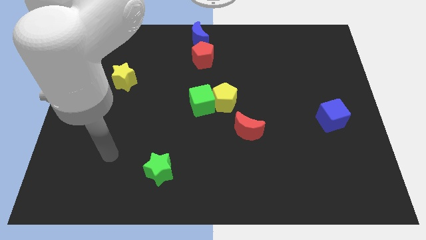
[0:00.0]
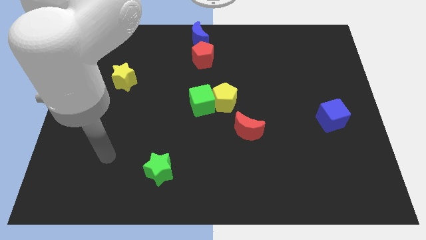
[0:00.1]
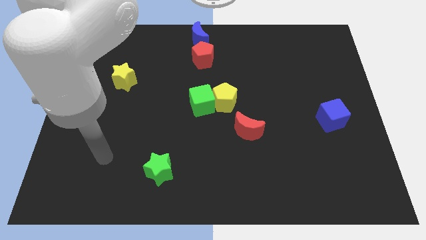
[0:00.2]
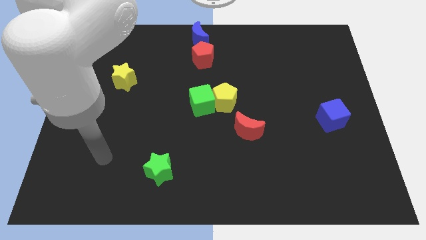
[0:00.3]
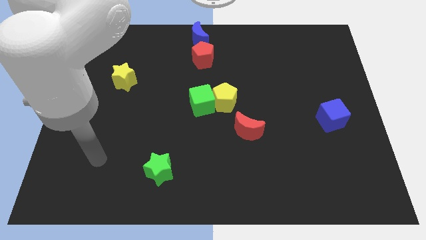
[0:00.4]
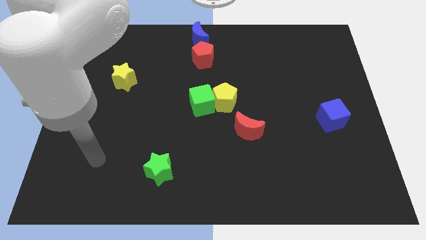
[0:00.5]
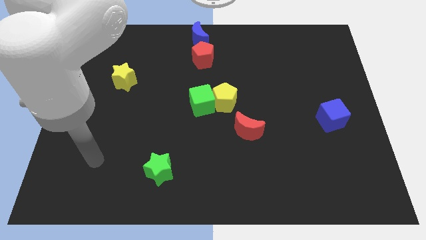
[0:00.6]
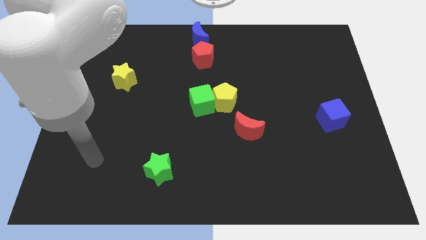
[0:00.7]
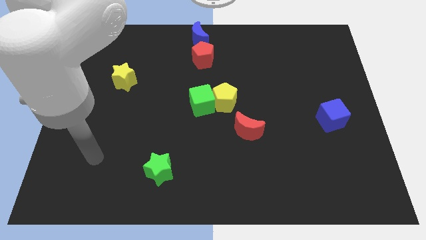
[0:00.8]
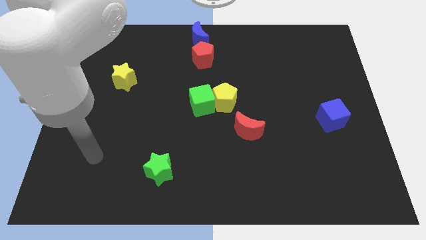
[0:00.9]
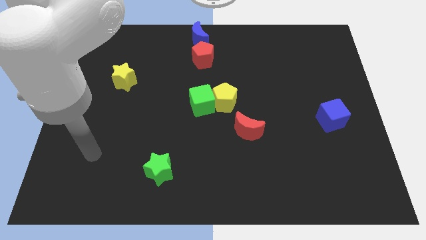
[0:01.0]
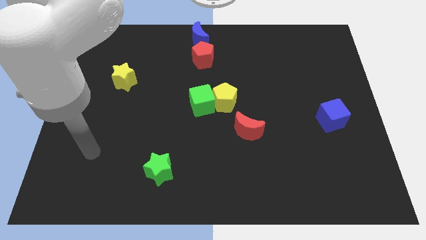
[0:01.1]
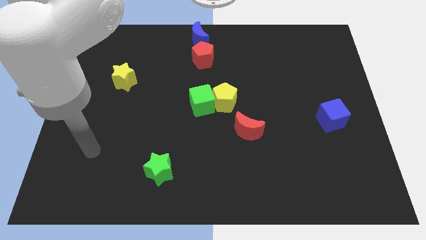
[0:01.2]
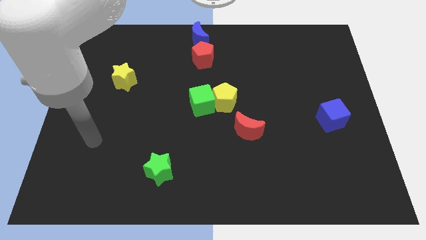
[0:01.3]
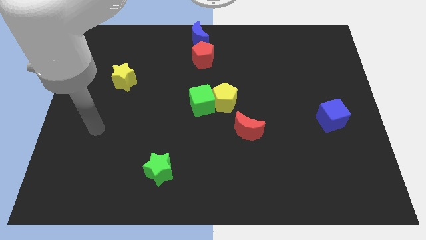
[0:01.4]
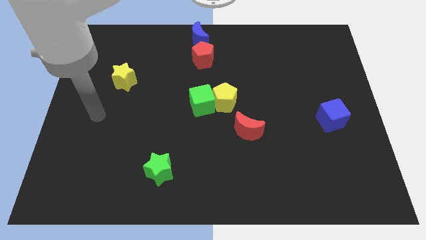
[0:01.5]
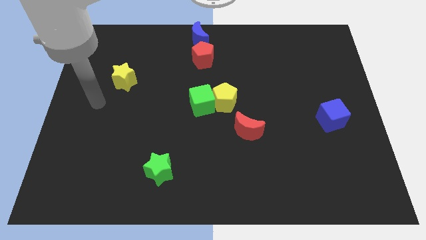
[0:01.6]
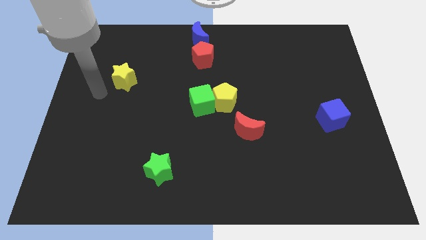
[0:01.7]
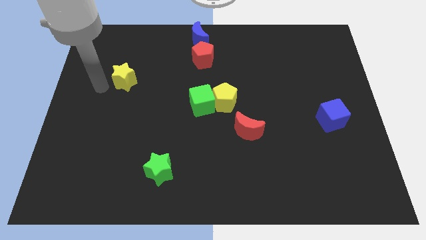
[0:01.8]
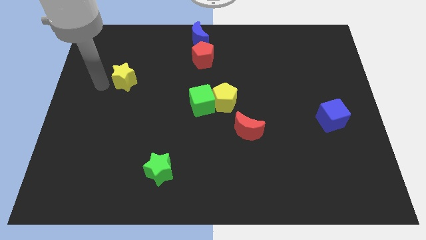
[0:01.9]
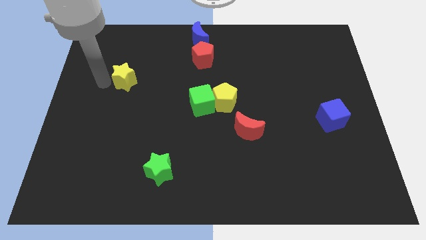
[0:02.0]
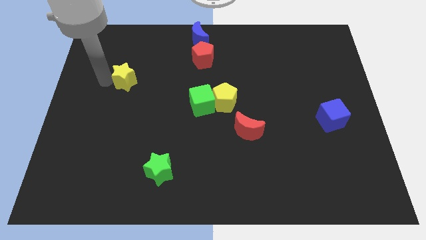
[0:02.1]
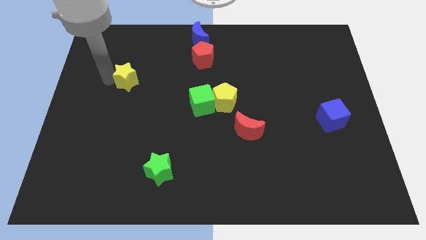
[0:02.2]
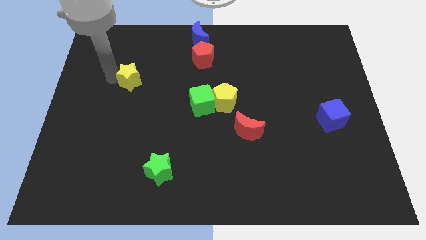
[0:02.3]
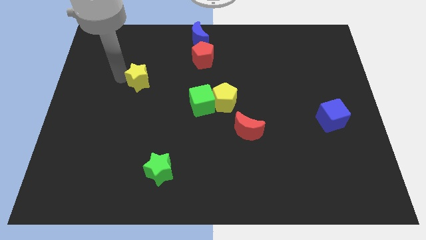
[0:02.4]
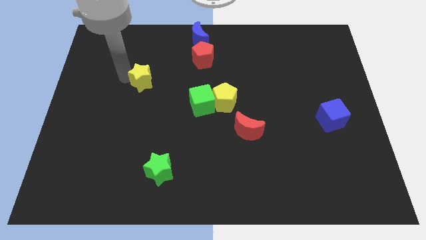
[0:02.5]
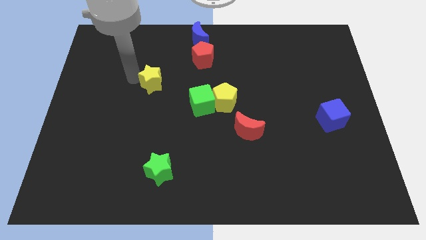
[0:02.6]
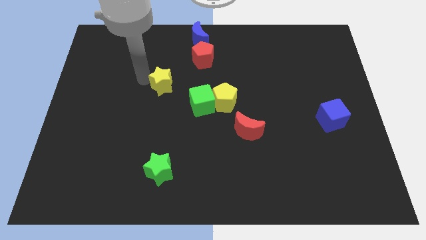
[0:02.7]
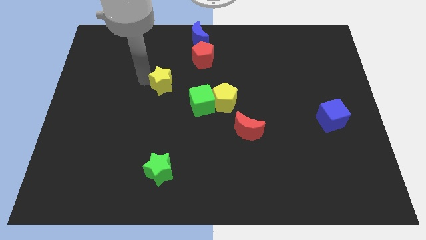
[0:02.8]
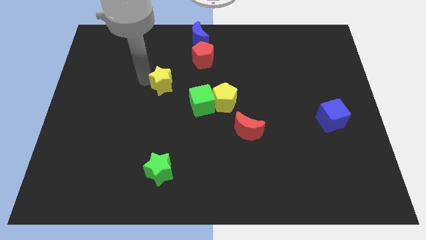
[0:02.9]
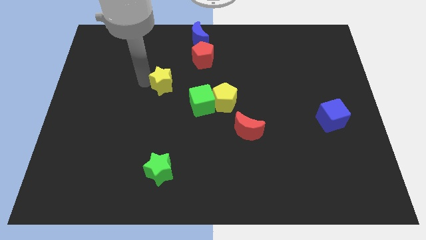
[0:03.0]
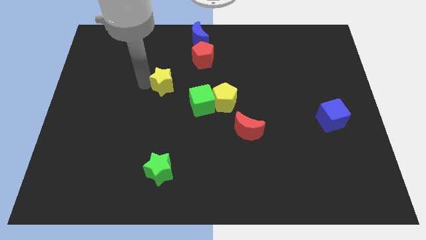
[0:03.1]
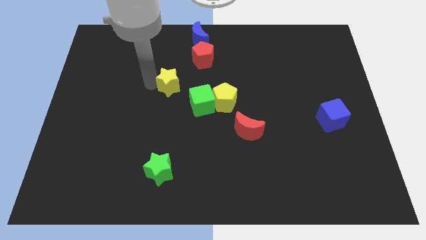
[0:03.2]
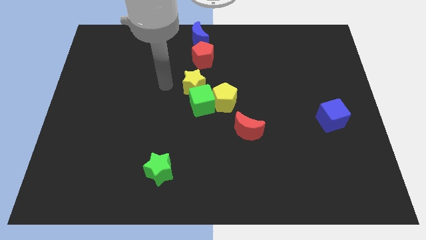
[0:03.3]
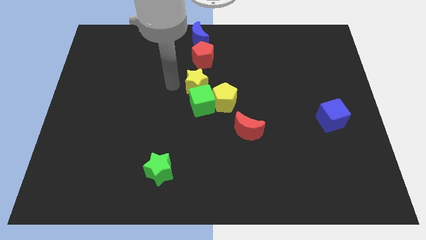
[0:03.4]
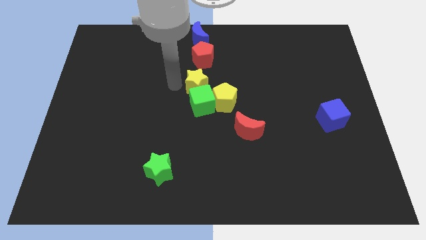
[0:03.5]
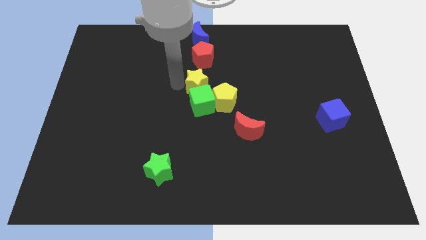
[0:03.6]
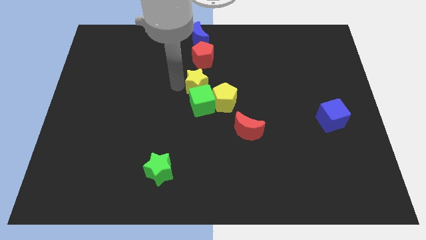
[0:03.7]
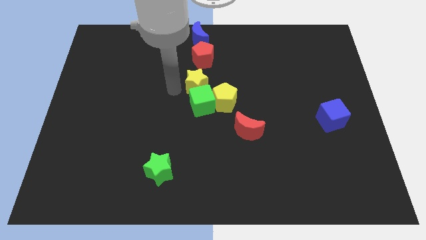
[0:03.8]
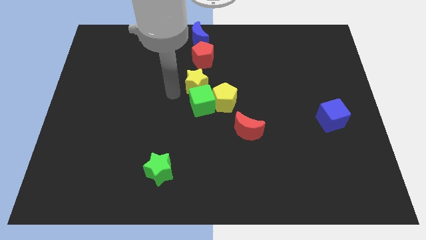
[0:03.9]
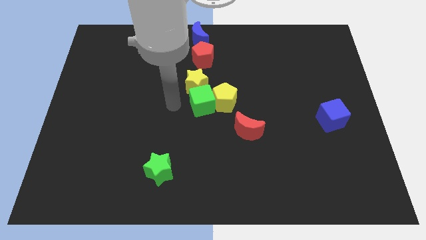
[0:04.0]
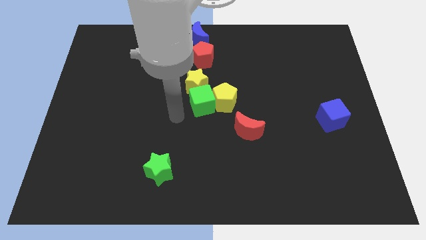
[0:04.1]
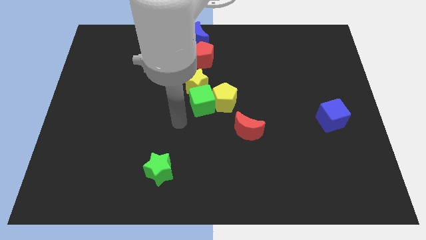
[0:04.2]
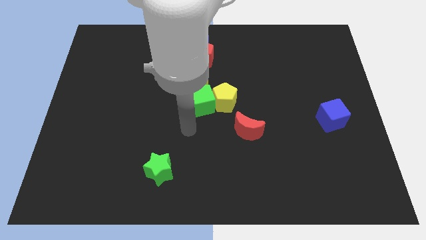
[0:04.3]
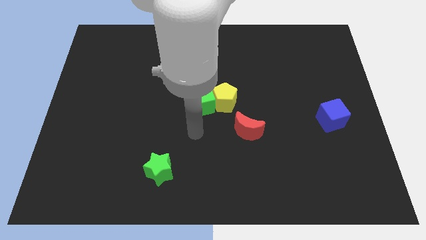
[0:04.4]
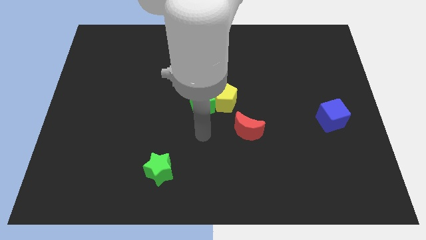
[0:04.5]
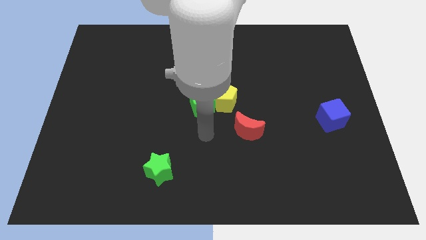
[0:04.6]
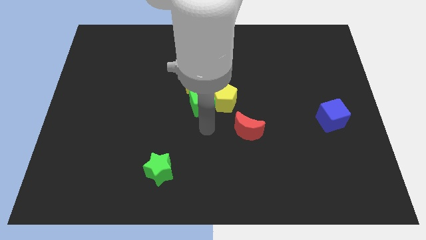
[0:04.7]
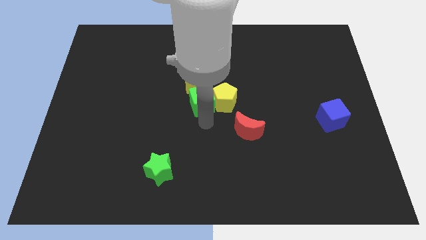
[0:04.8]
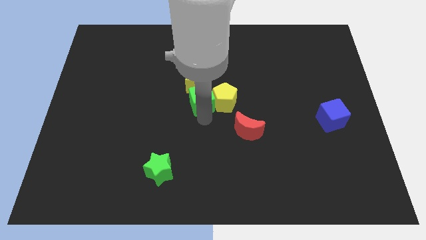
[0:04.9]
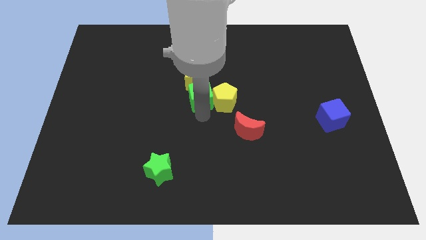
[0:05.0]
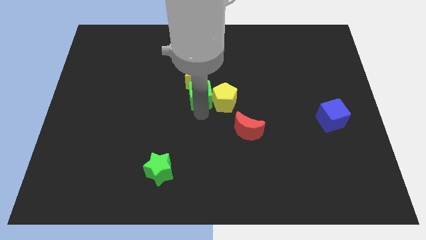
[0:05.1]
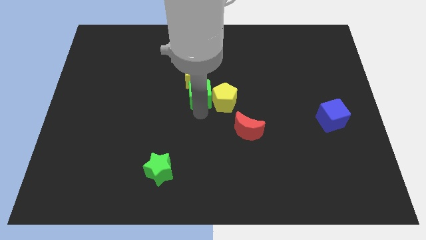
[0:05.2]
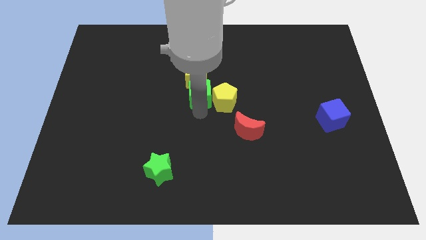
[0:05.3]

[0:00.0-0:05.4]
place the yellow star below the red pentagon

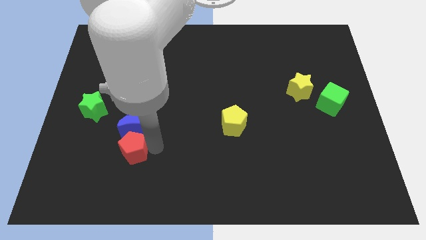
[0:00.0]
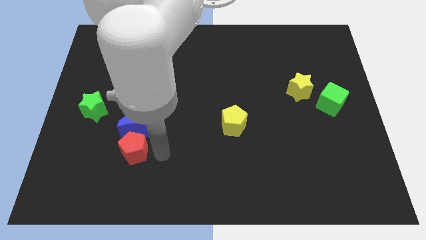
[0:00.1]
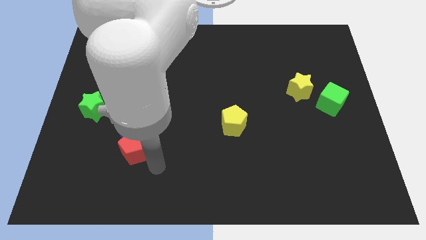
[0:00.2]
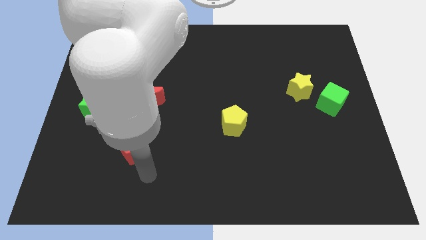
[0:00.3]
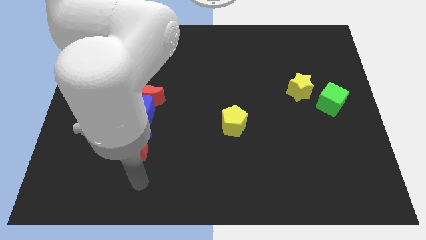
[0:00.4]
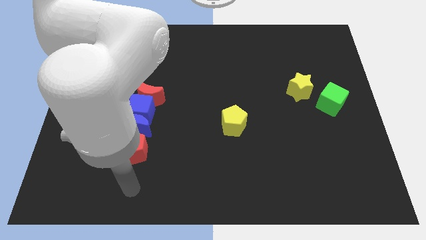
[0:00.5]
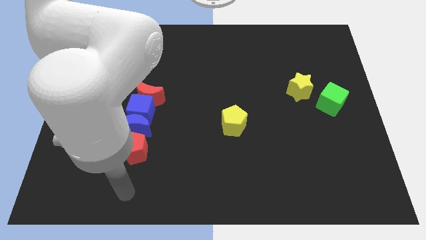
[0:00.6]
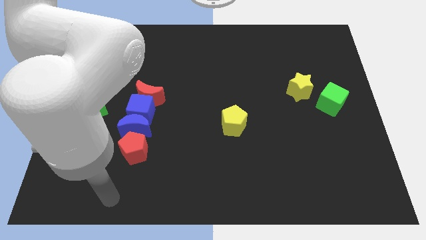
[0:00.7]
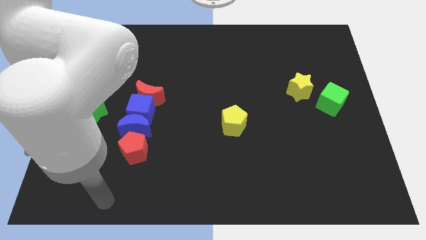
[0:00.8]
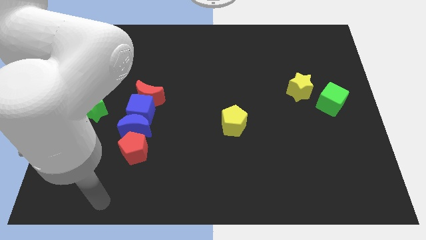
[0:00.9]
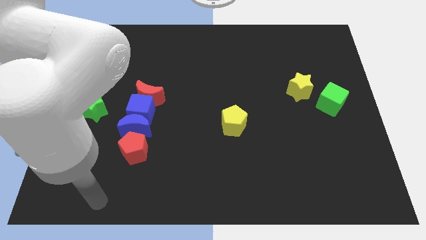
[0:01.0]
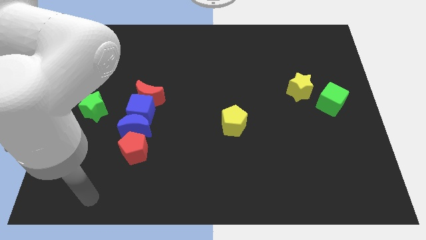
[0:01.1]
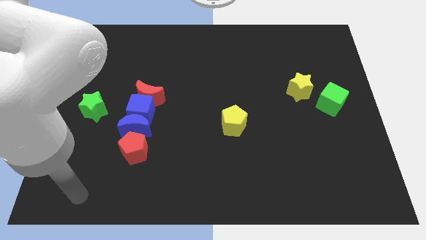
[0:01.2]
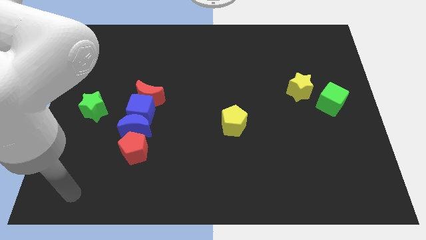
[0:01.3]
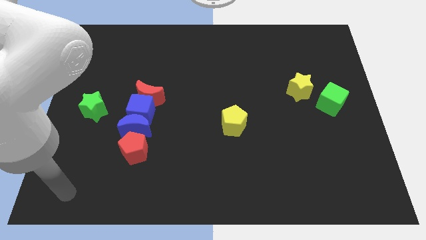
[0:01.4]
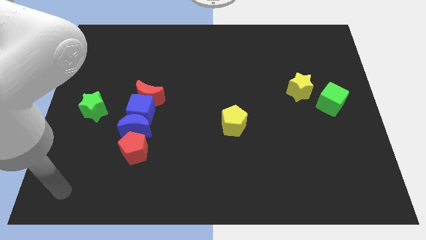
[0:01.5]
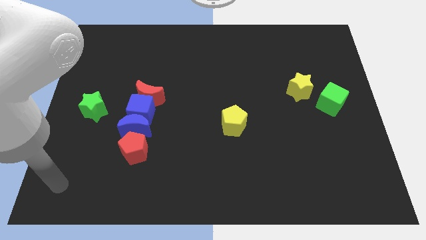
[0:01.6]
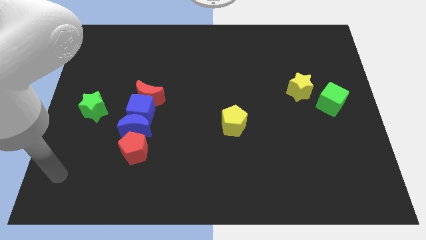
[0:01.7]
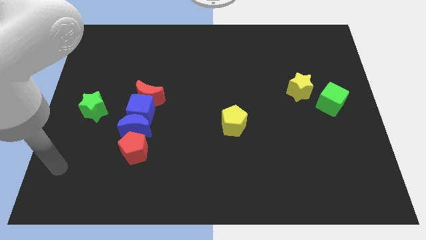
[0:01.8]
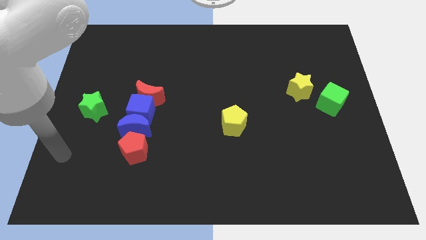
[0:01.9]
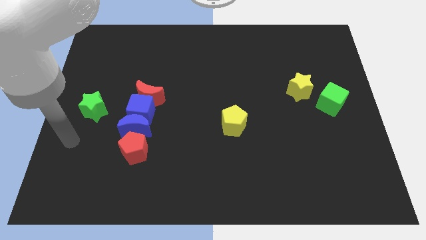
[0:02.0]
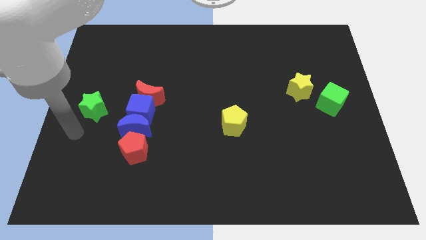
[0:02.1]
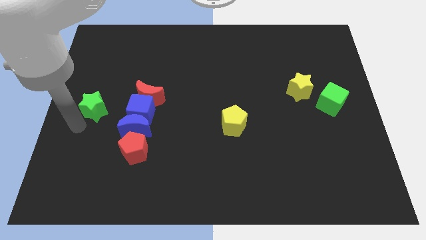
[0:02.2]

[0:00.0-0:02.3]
move the arm to the bottom left of the green star

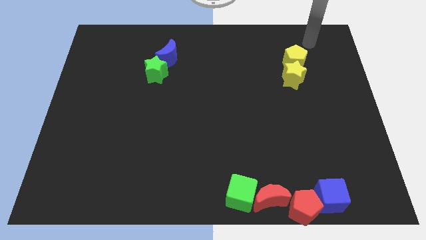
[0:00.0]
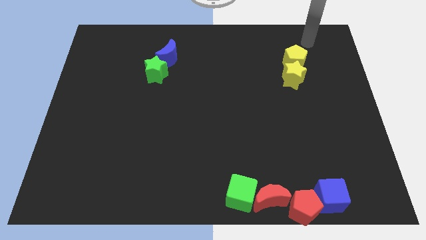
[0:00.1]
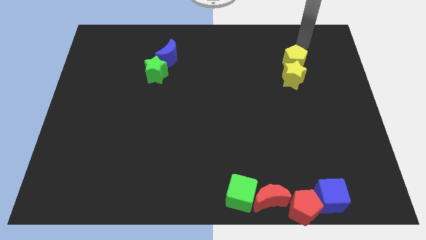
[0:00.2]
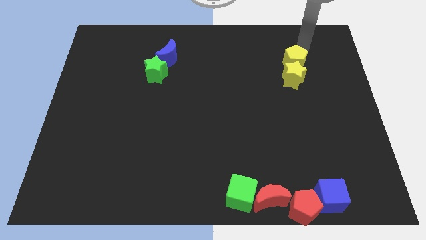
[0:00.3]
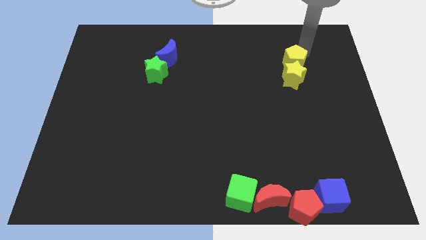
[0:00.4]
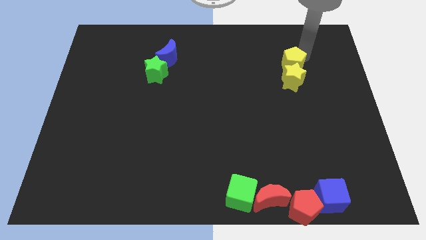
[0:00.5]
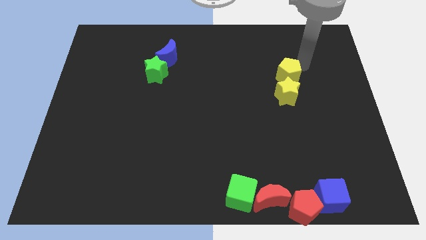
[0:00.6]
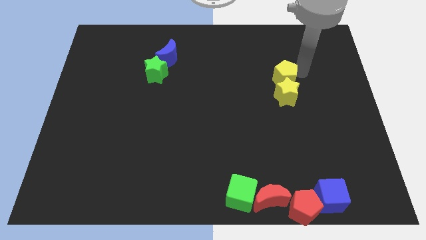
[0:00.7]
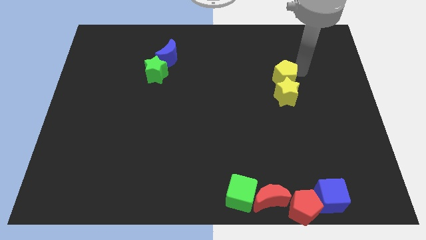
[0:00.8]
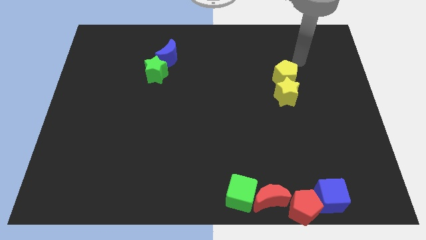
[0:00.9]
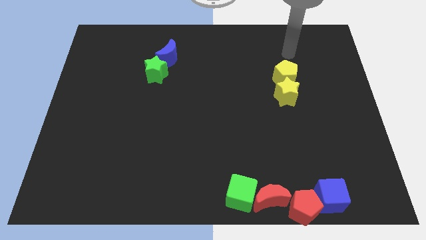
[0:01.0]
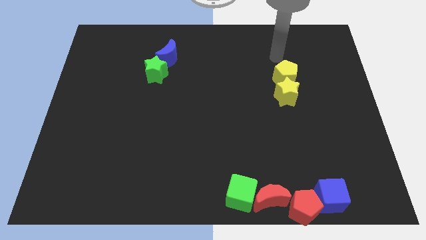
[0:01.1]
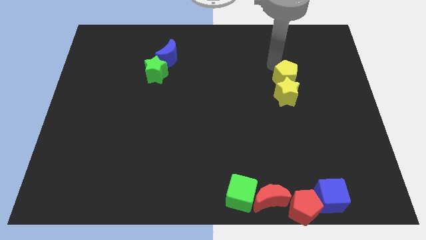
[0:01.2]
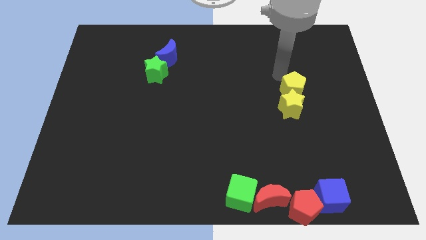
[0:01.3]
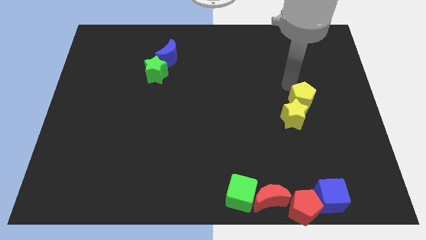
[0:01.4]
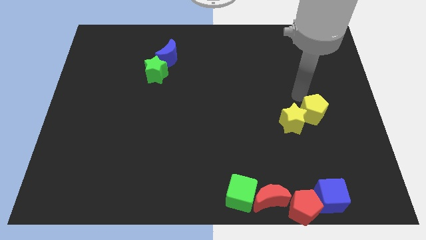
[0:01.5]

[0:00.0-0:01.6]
slide the yellow blocks towards bottom
